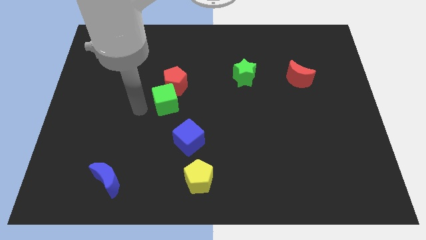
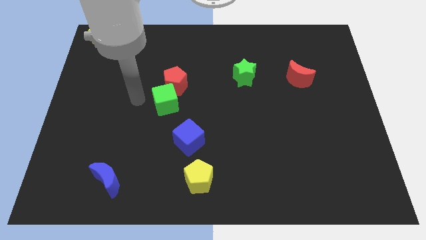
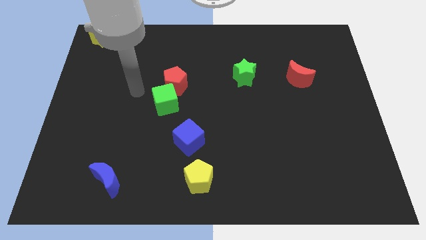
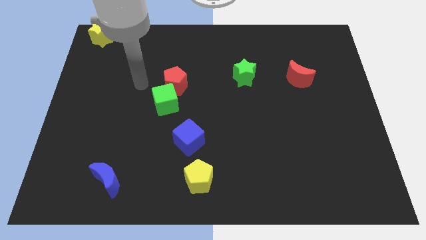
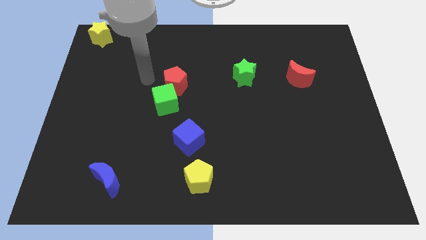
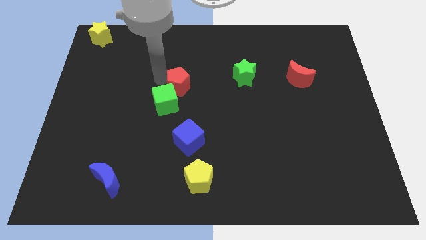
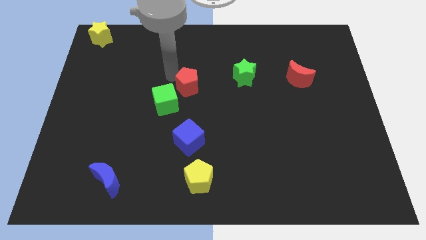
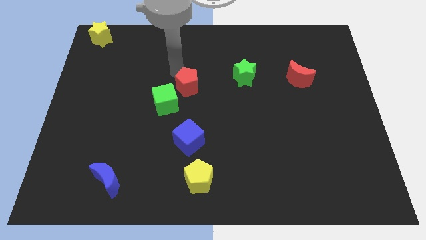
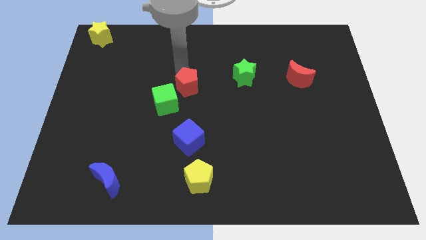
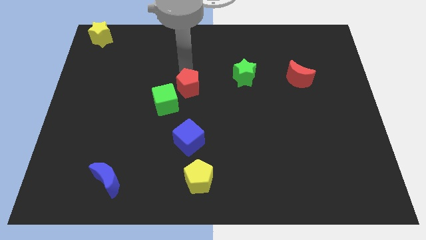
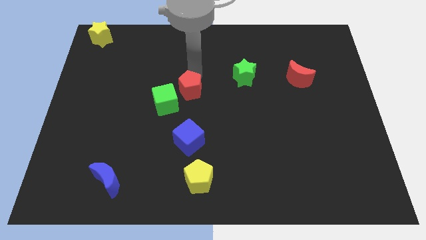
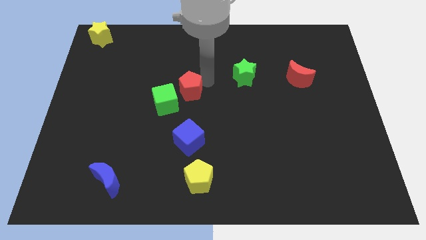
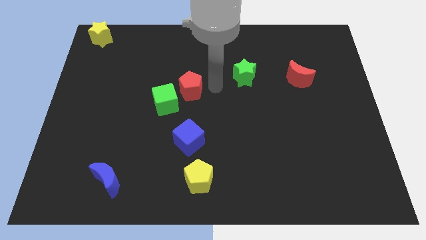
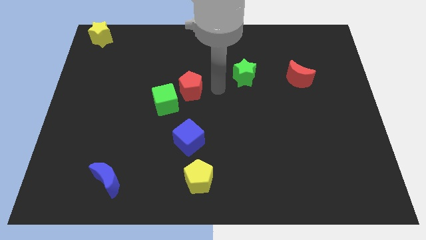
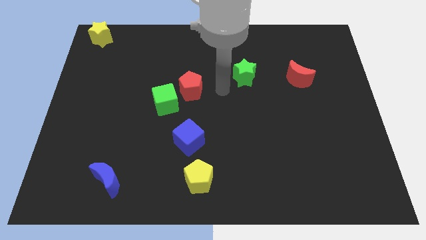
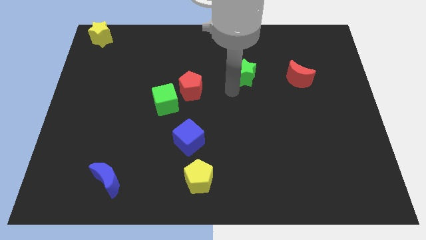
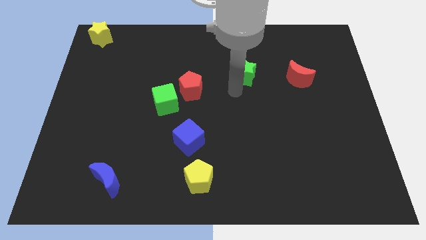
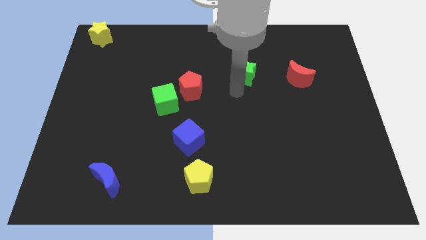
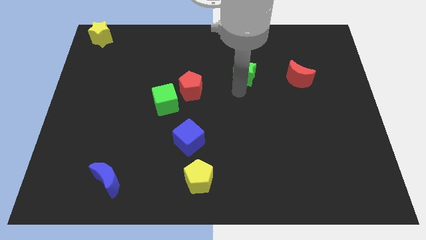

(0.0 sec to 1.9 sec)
separate the red pentagon from the green cube

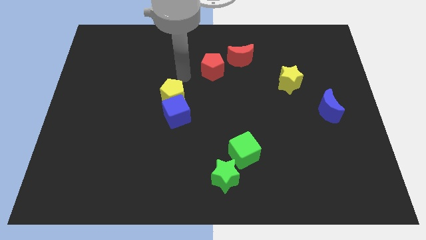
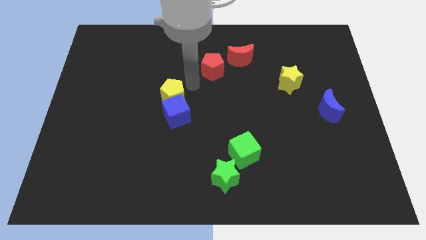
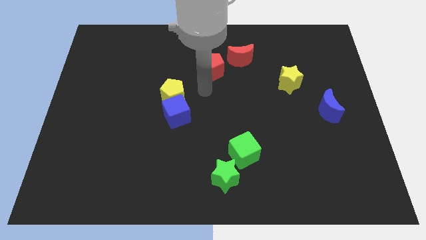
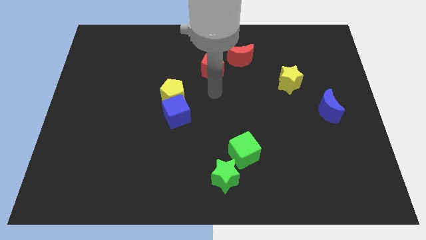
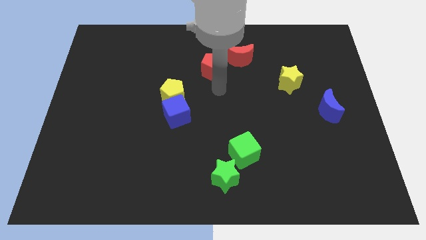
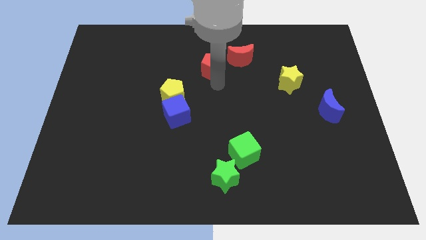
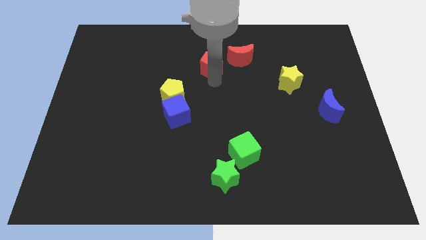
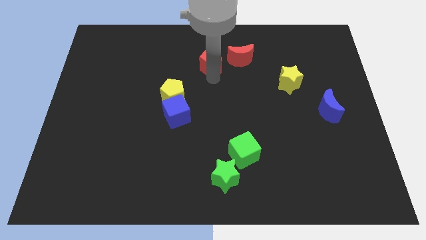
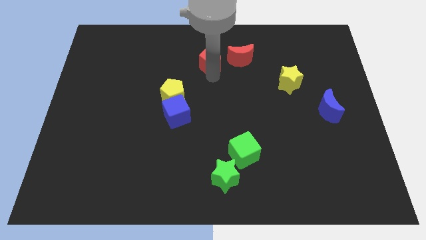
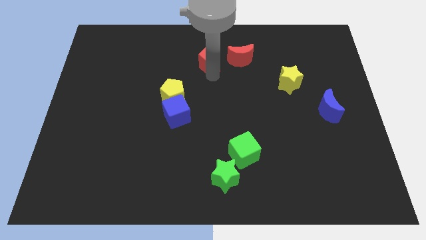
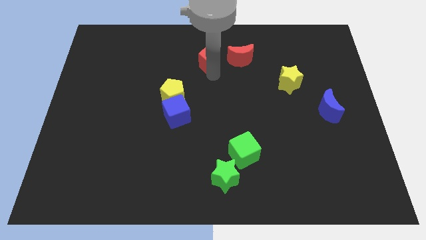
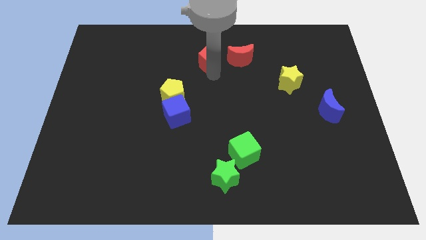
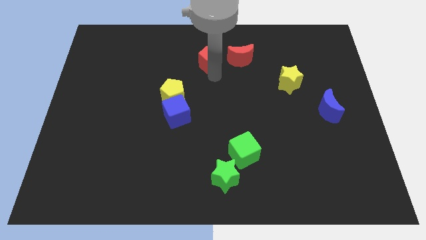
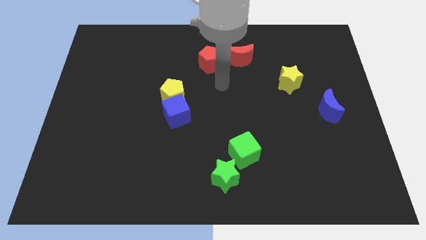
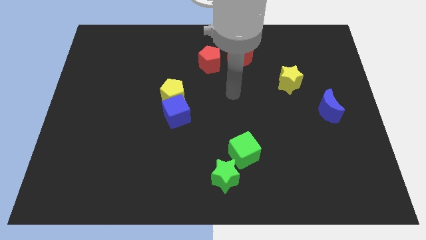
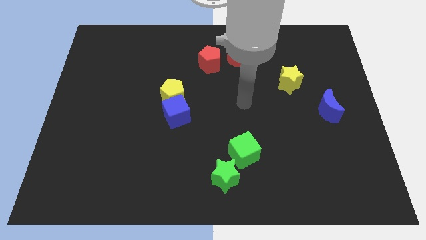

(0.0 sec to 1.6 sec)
place red pentagon to the left of red moon

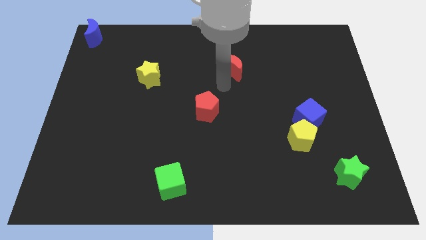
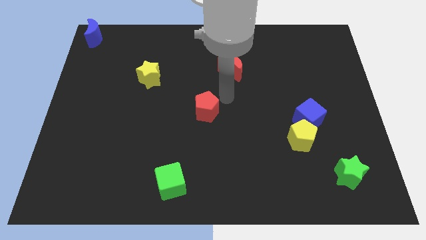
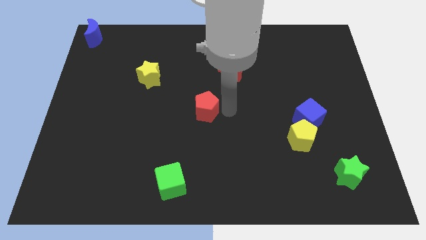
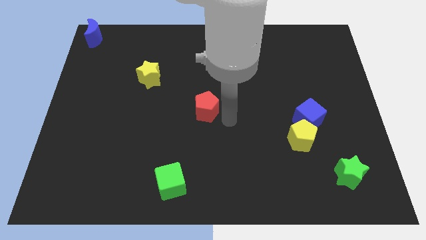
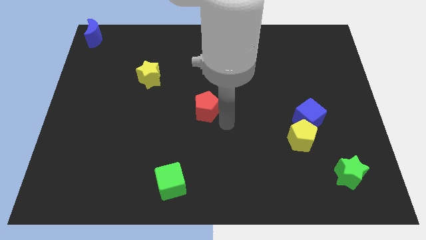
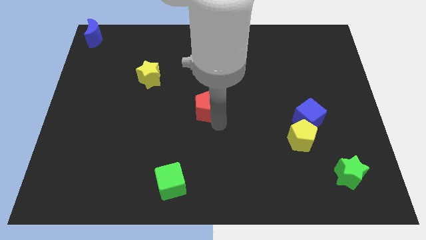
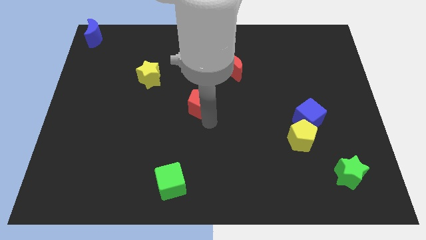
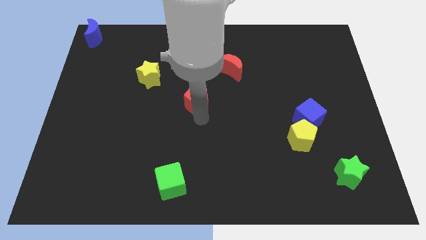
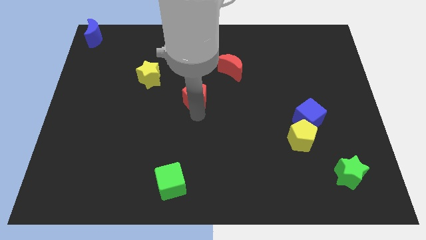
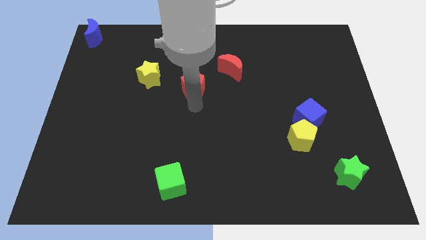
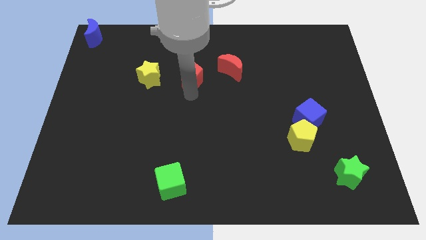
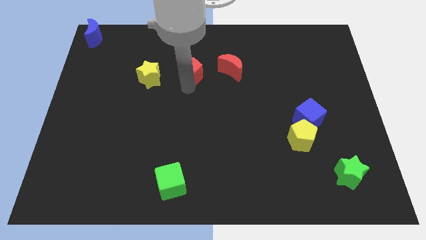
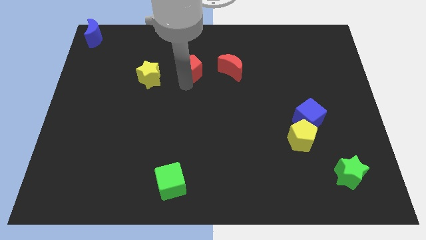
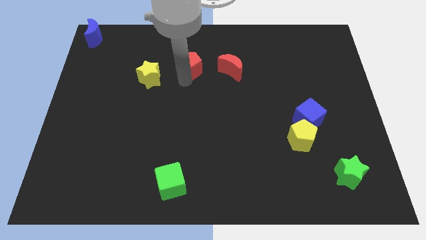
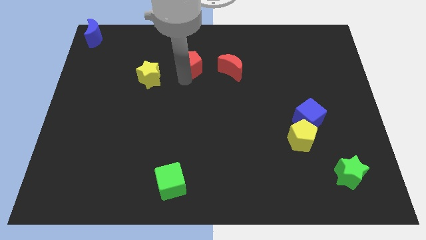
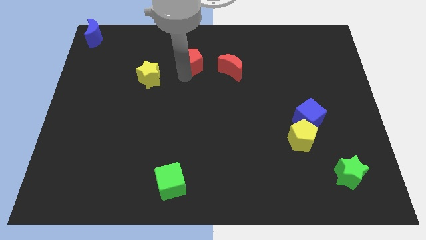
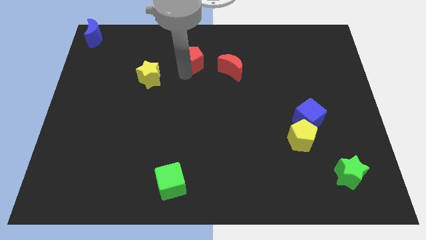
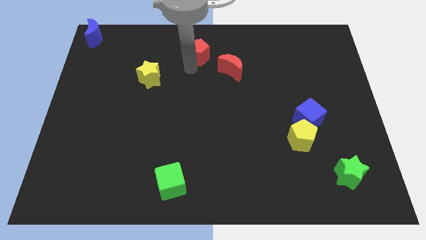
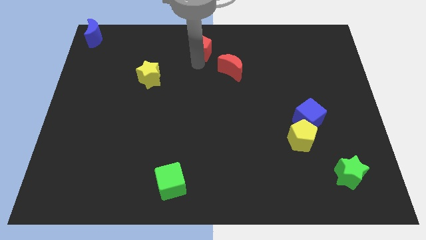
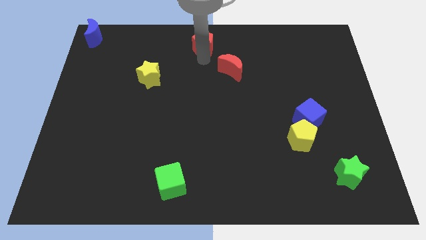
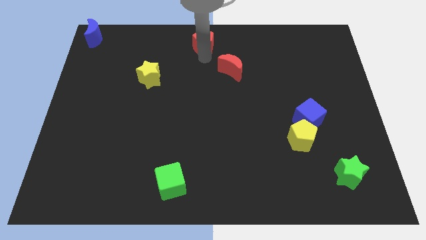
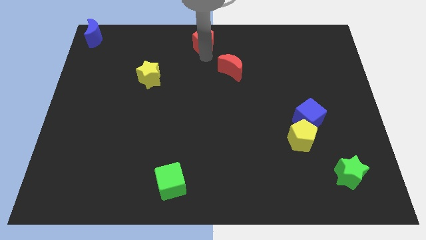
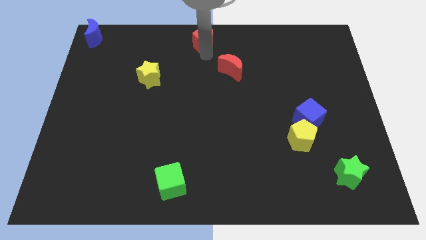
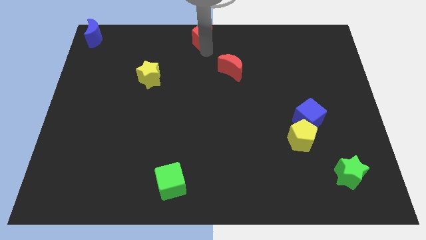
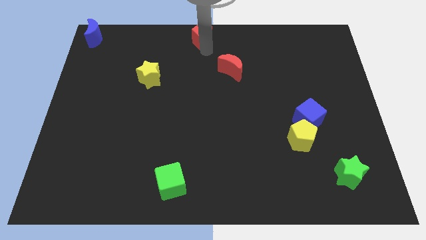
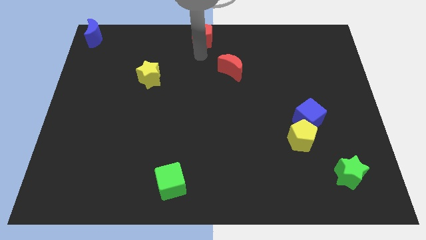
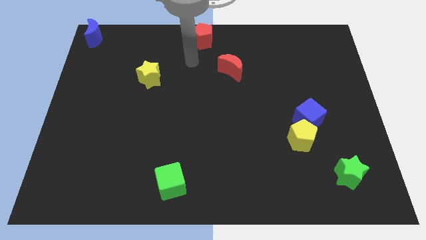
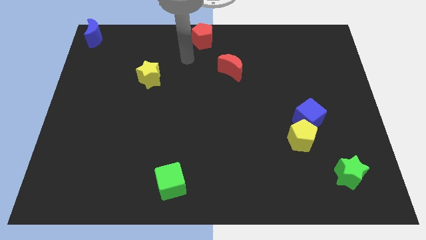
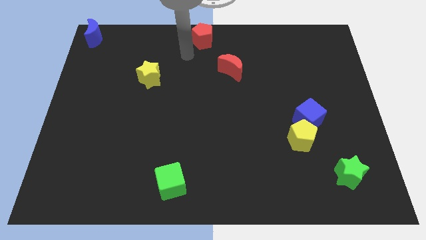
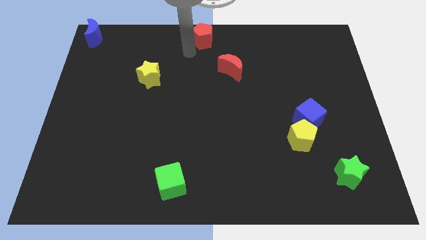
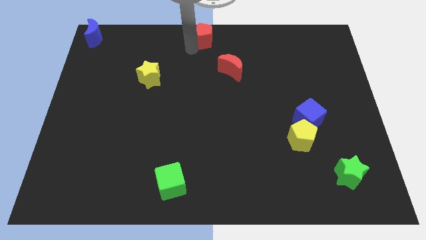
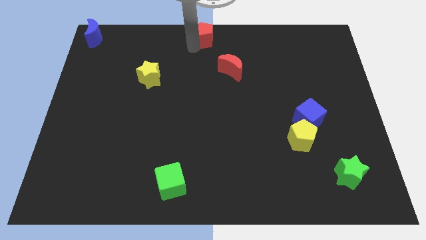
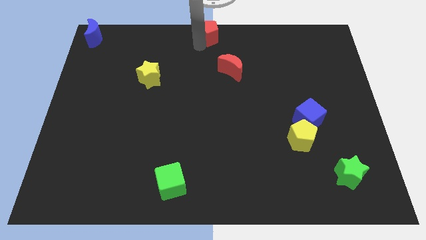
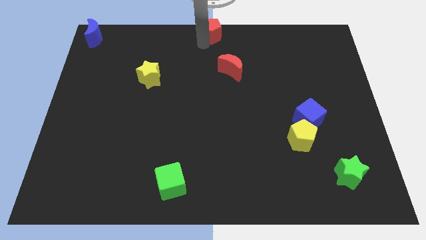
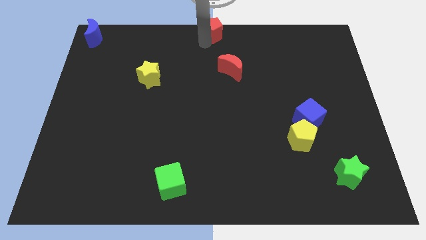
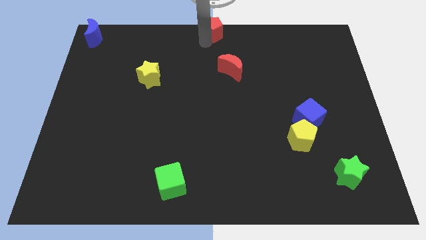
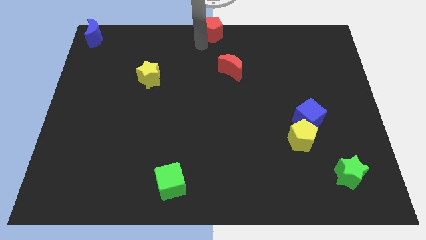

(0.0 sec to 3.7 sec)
move red pentagon to top middle of the board

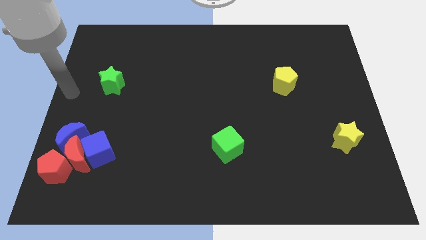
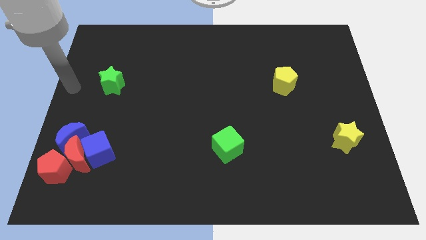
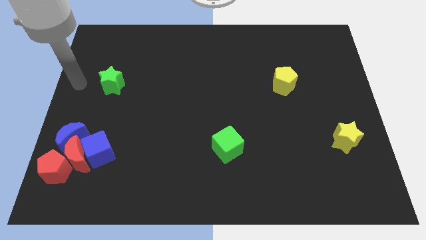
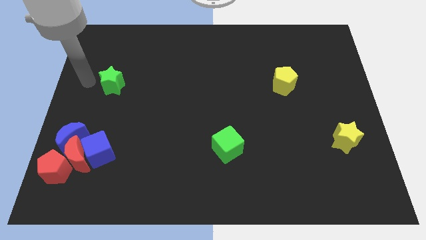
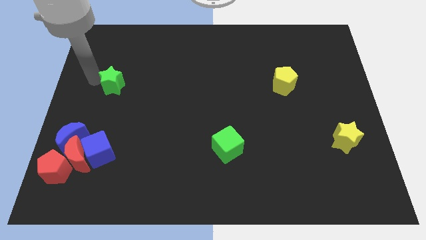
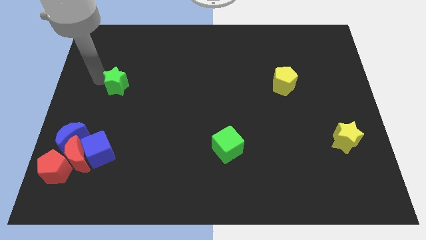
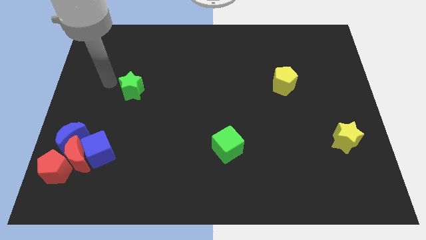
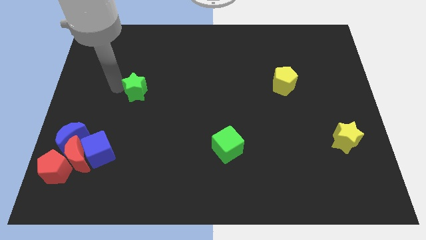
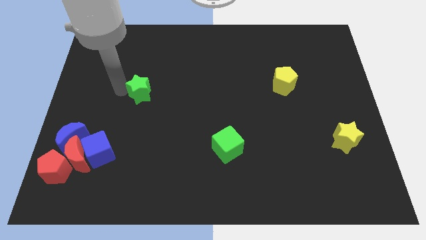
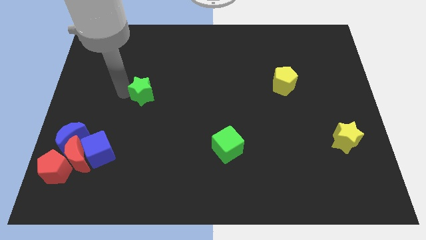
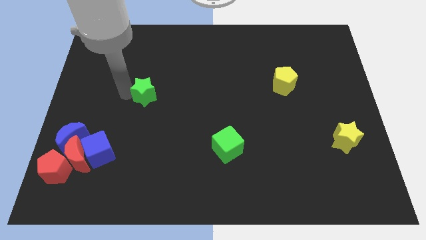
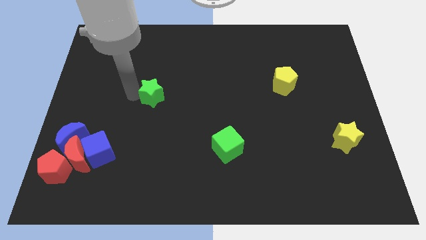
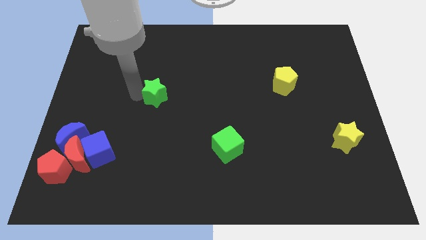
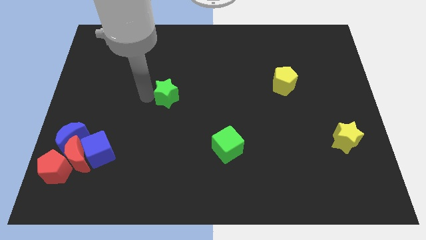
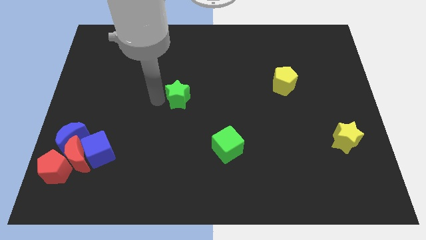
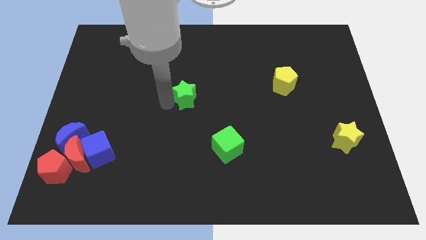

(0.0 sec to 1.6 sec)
move the green star diagonally on the top left side of the green cube
